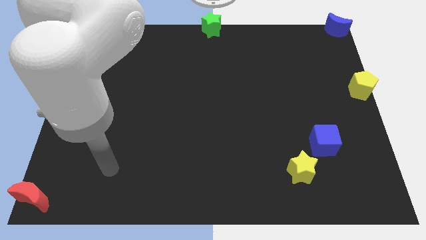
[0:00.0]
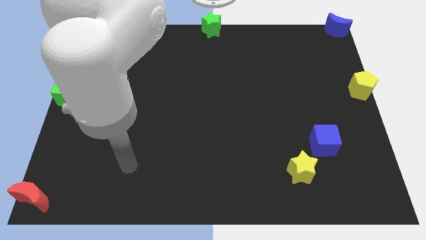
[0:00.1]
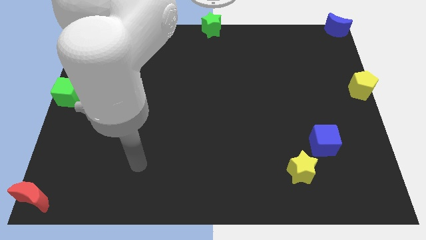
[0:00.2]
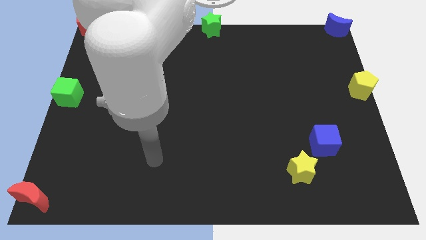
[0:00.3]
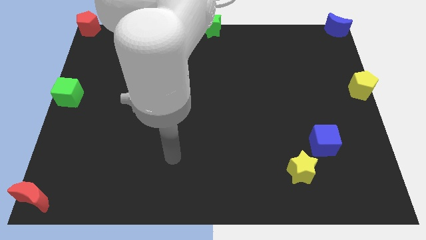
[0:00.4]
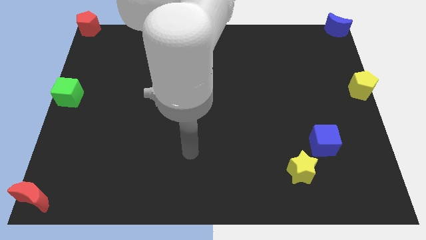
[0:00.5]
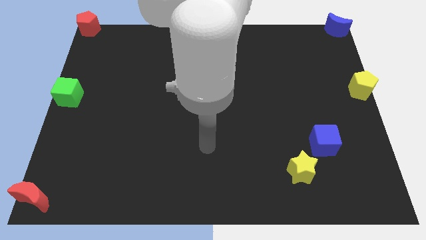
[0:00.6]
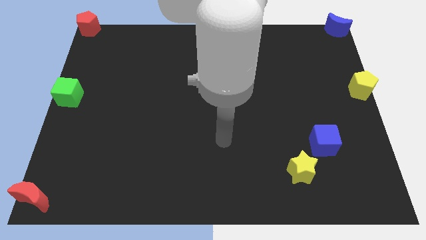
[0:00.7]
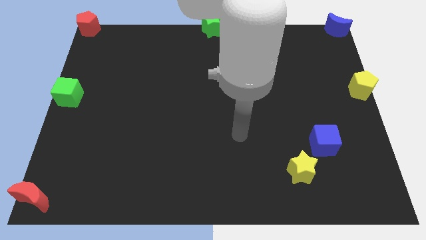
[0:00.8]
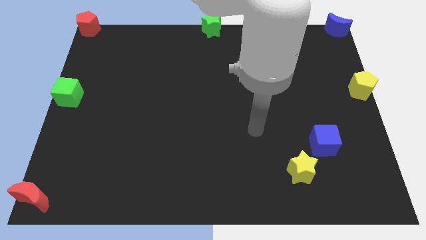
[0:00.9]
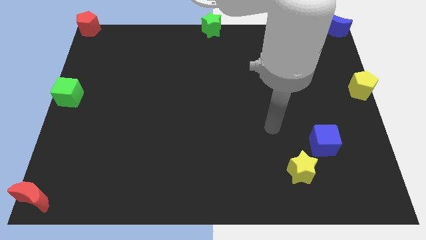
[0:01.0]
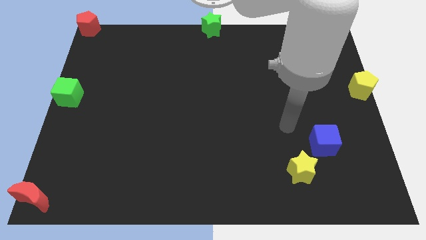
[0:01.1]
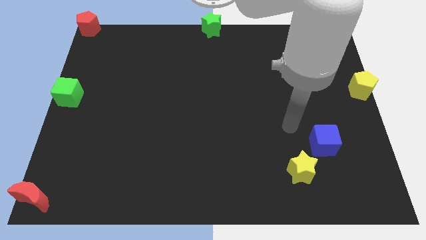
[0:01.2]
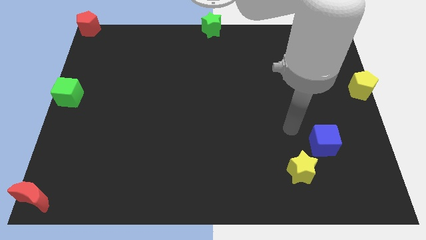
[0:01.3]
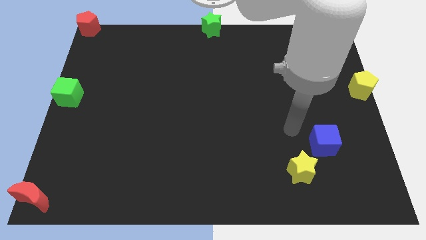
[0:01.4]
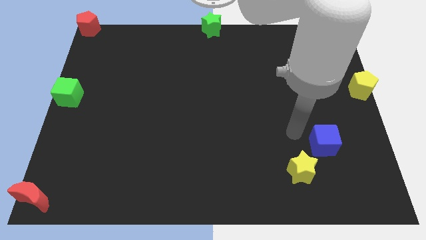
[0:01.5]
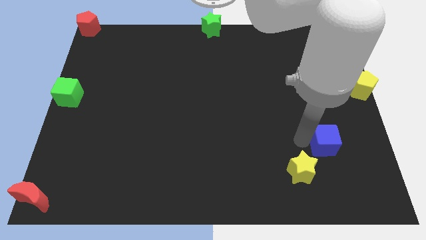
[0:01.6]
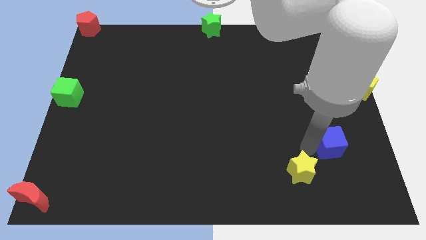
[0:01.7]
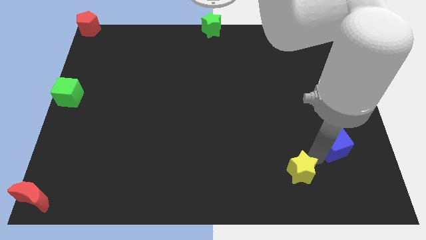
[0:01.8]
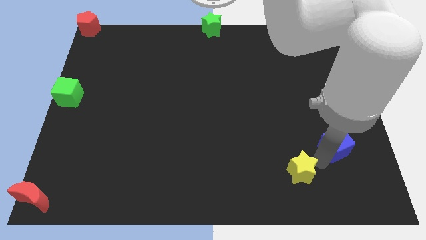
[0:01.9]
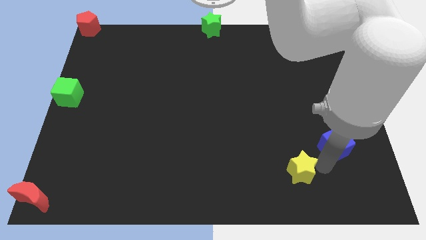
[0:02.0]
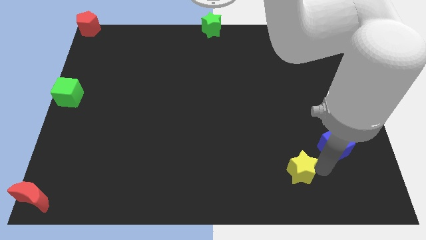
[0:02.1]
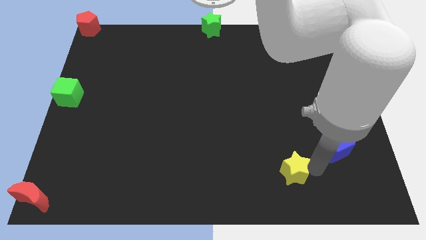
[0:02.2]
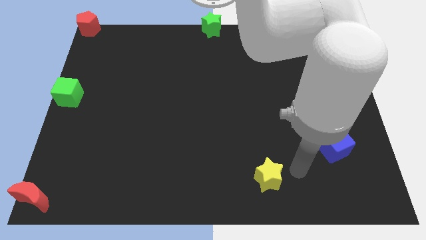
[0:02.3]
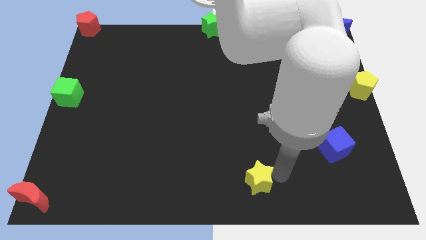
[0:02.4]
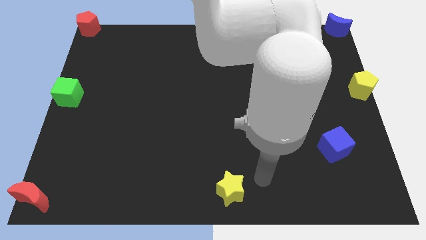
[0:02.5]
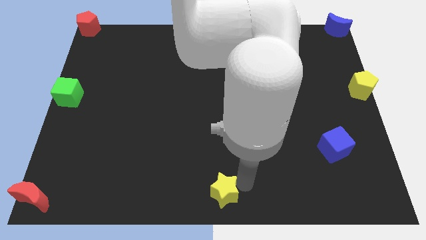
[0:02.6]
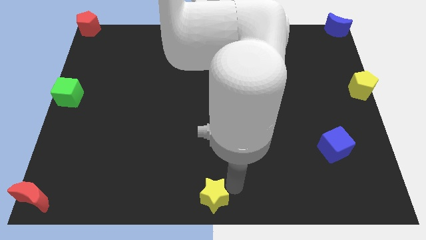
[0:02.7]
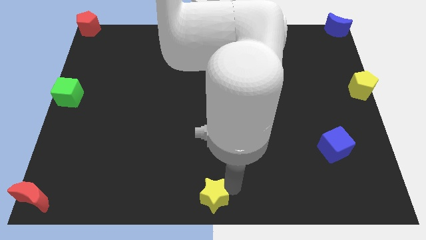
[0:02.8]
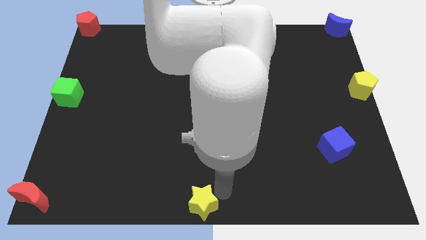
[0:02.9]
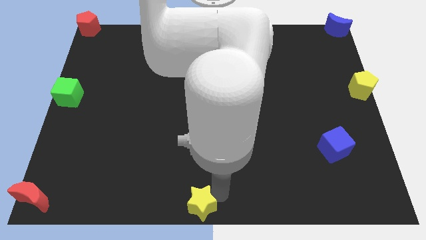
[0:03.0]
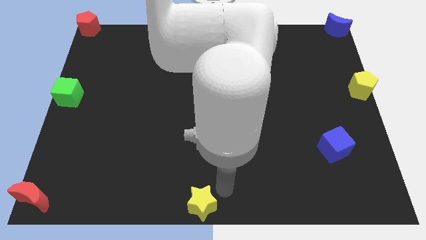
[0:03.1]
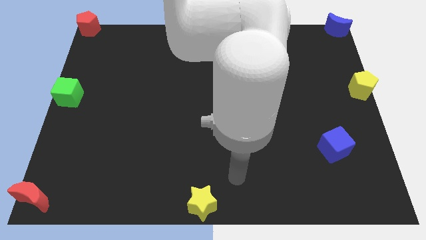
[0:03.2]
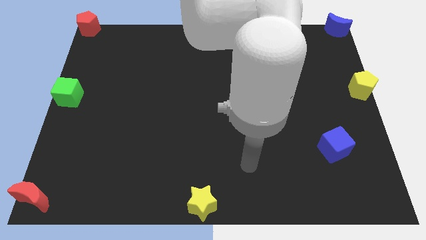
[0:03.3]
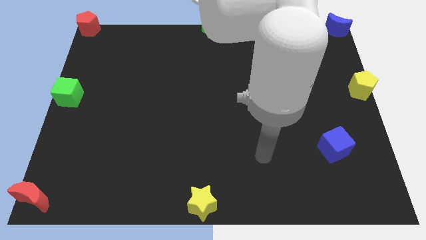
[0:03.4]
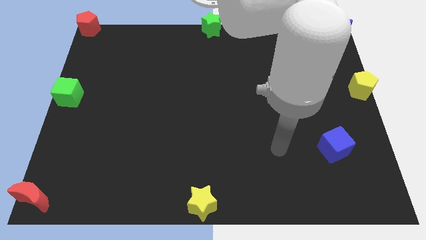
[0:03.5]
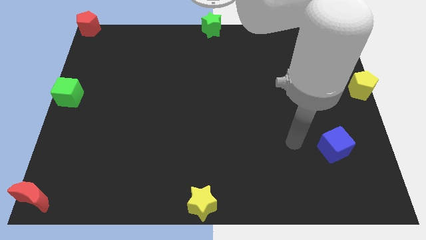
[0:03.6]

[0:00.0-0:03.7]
place the yellow star near the bottom center of the board

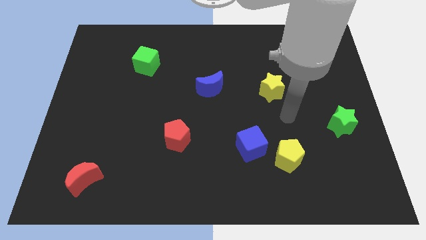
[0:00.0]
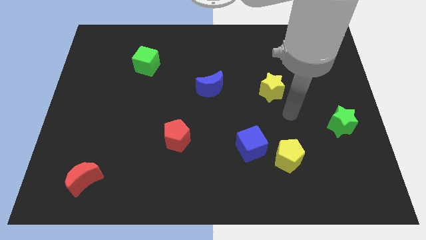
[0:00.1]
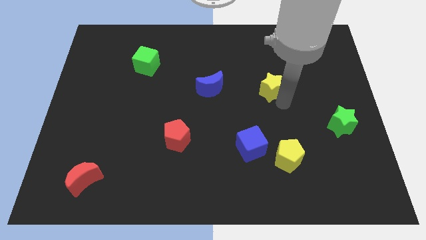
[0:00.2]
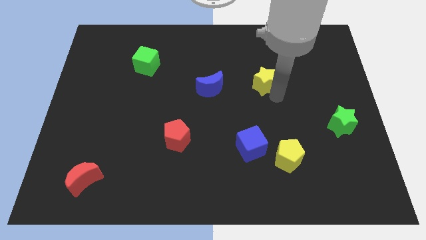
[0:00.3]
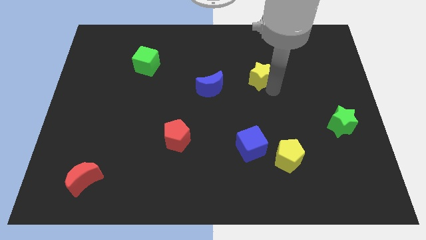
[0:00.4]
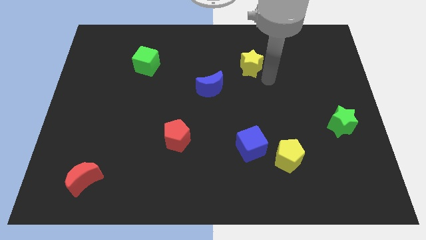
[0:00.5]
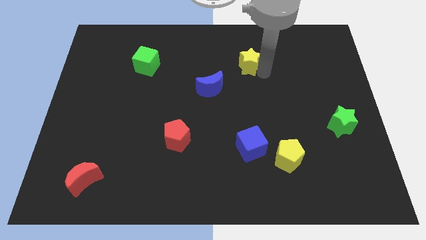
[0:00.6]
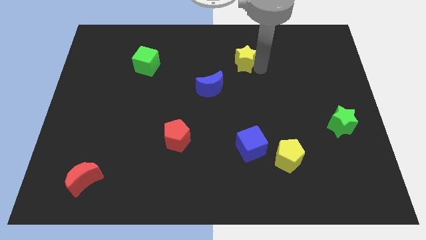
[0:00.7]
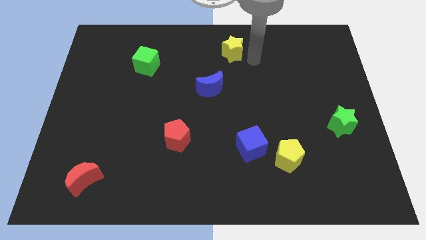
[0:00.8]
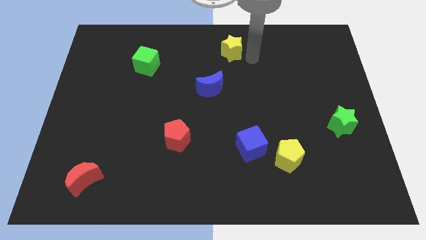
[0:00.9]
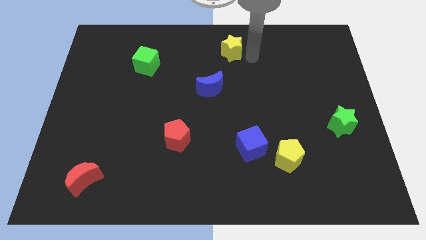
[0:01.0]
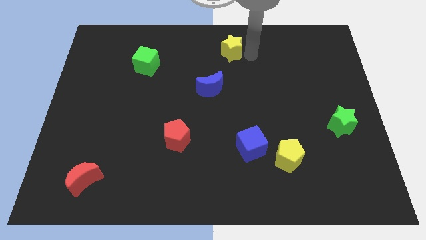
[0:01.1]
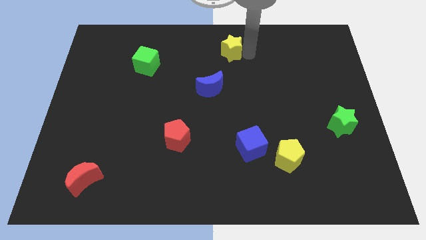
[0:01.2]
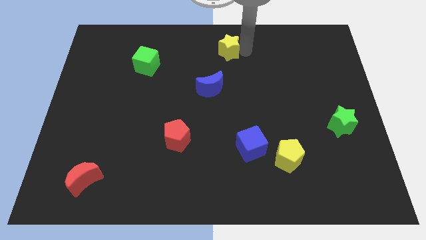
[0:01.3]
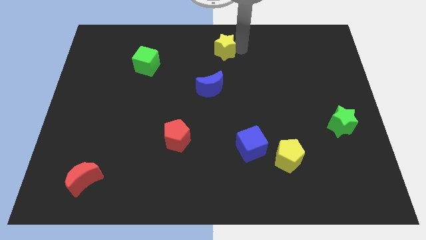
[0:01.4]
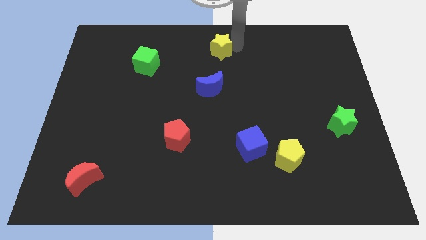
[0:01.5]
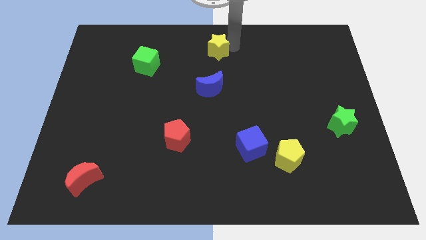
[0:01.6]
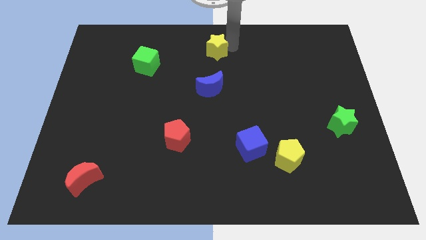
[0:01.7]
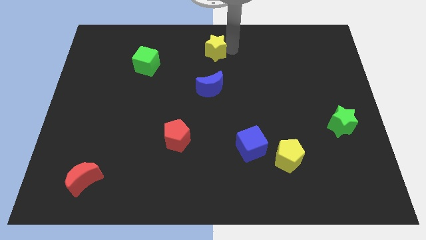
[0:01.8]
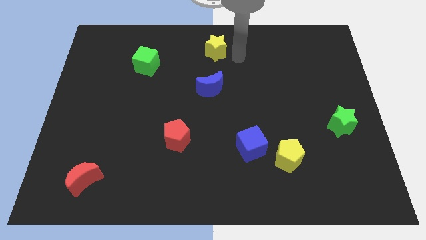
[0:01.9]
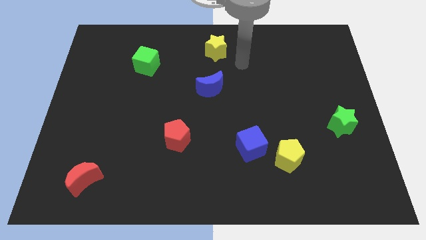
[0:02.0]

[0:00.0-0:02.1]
place yellow star towards top center

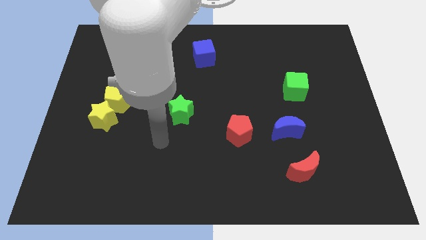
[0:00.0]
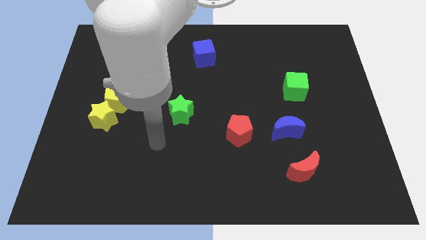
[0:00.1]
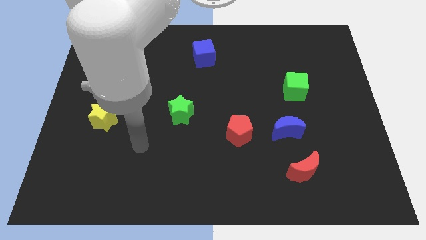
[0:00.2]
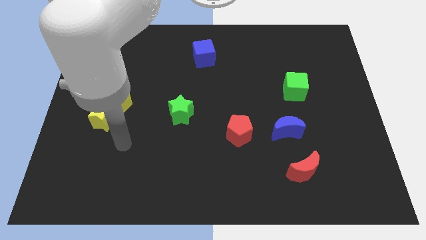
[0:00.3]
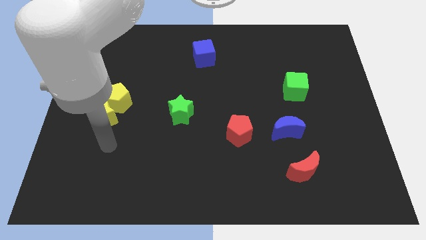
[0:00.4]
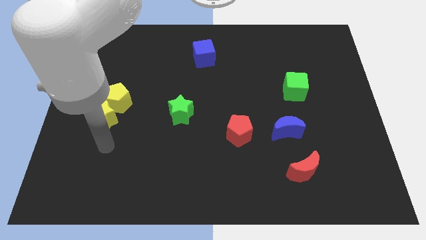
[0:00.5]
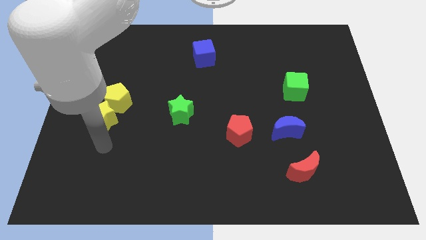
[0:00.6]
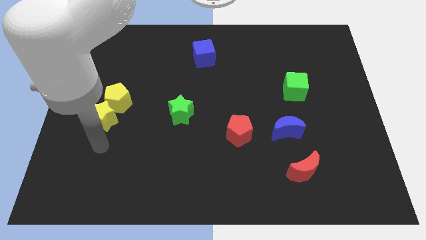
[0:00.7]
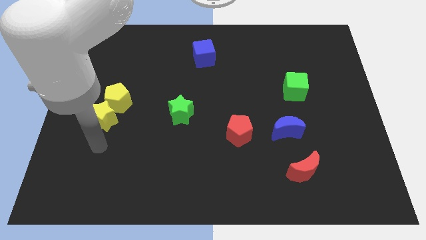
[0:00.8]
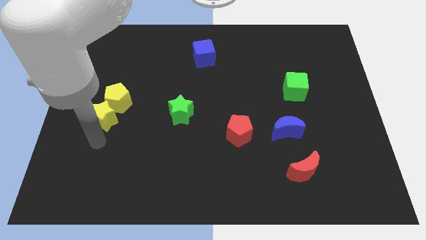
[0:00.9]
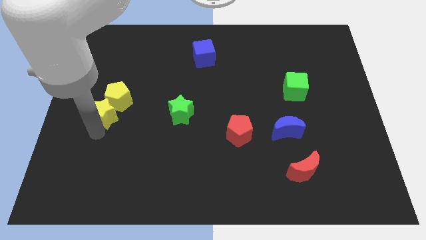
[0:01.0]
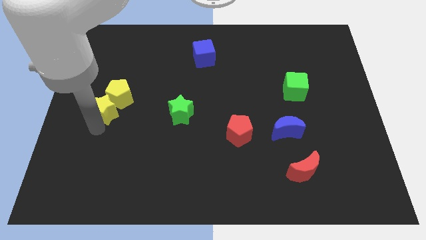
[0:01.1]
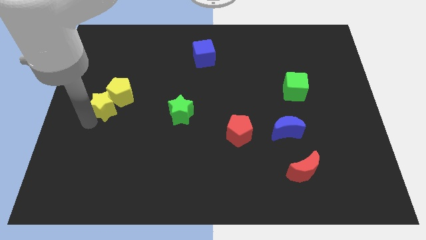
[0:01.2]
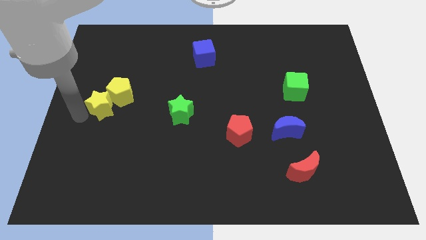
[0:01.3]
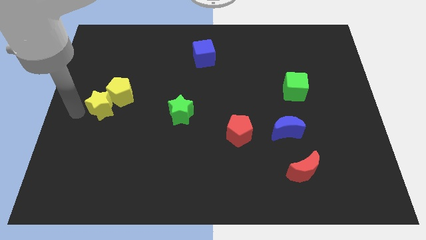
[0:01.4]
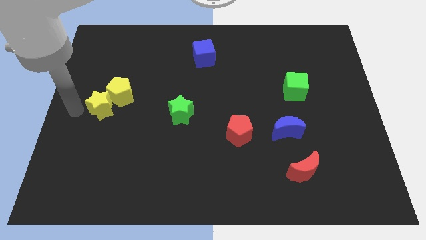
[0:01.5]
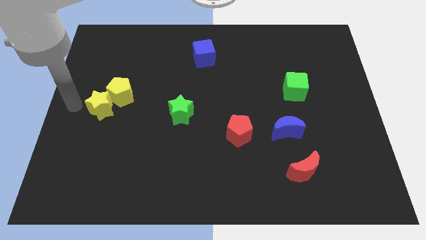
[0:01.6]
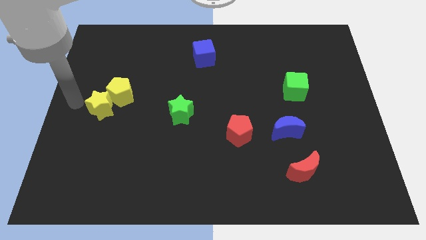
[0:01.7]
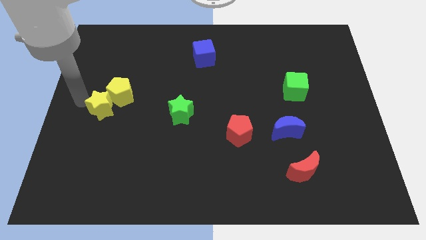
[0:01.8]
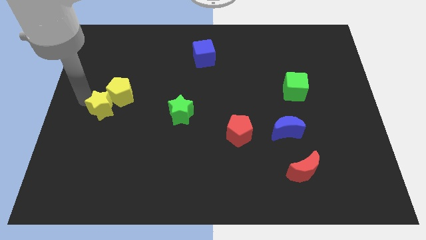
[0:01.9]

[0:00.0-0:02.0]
push the yellow star slightly towards up

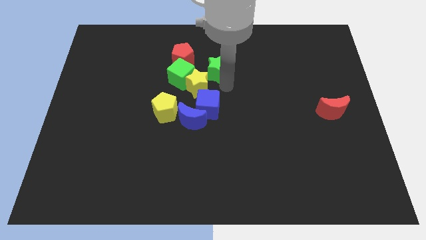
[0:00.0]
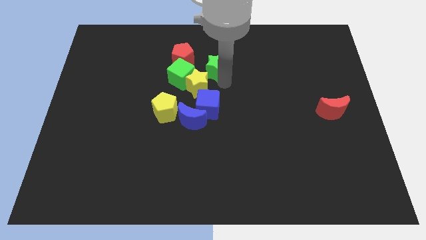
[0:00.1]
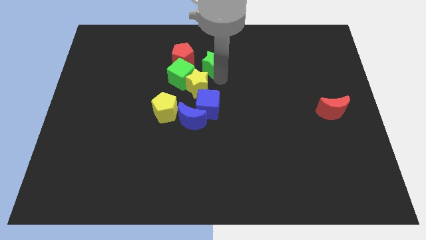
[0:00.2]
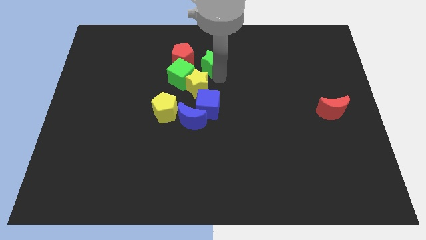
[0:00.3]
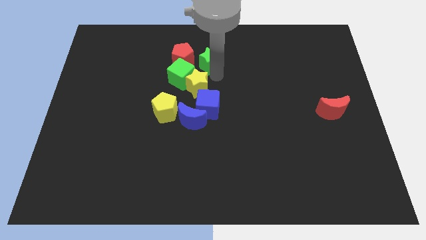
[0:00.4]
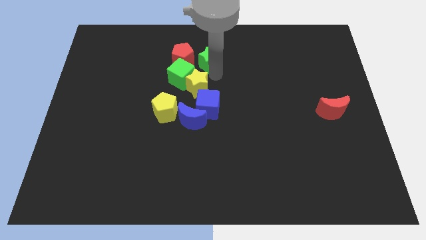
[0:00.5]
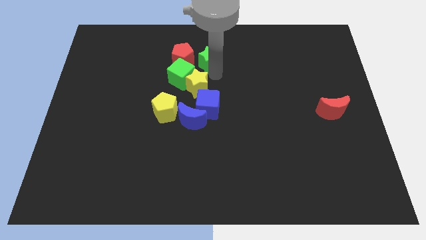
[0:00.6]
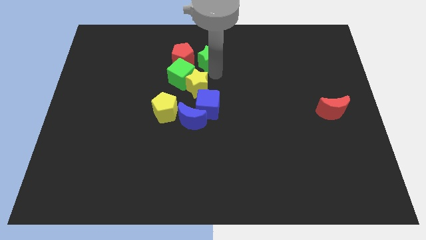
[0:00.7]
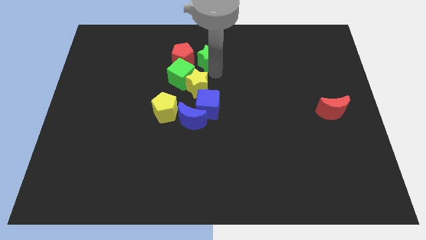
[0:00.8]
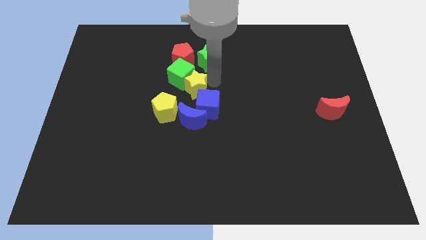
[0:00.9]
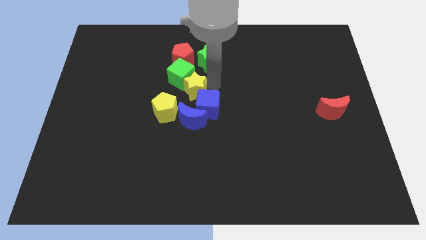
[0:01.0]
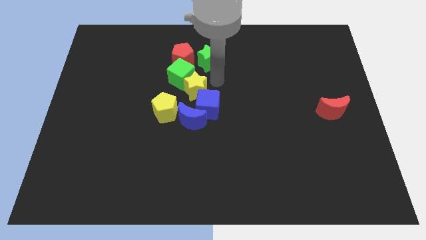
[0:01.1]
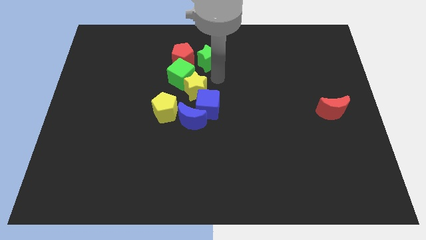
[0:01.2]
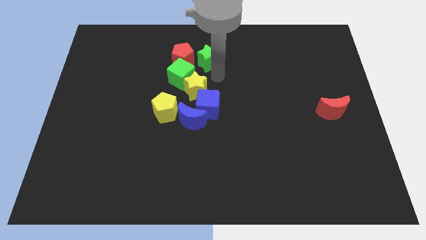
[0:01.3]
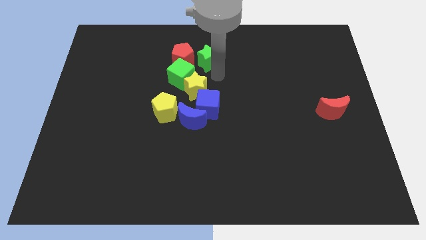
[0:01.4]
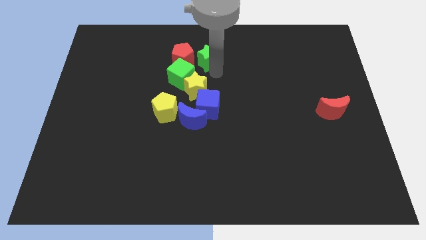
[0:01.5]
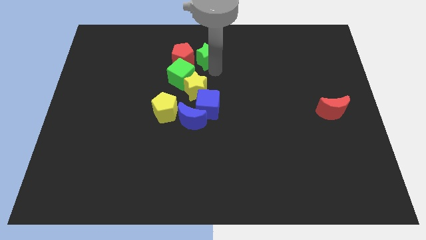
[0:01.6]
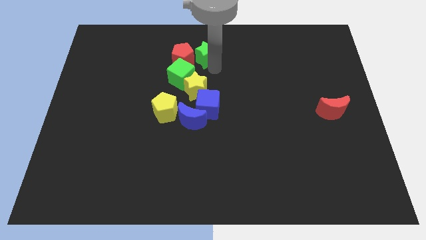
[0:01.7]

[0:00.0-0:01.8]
place the green star right to the red pentagon
